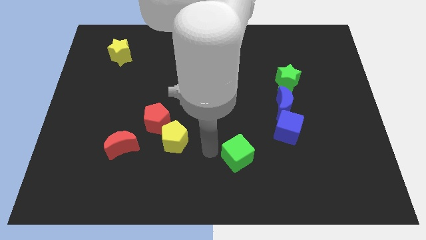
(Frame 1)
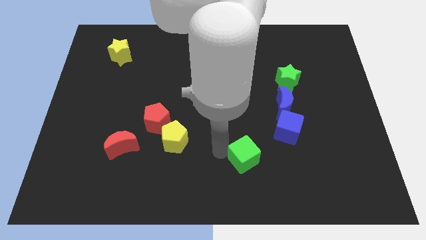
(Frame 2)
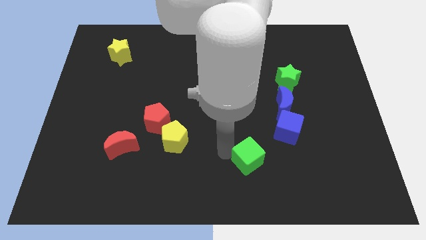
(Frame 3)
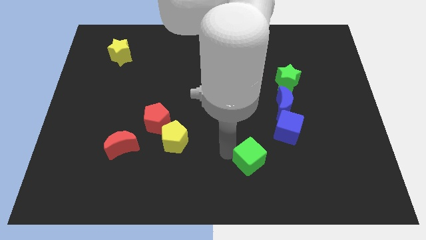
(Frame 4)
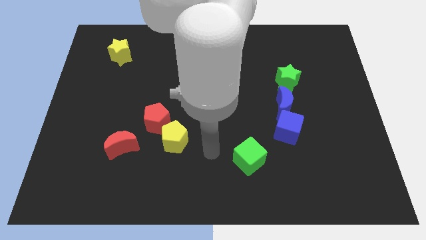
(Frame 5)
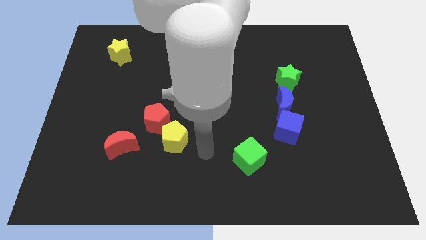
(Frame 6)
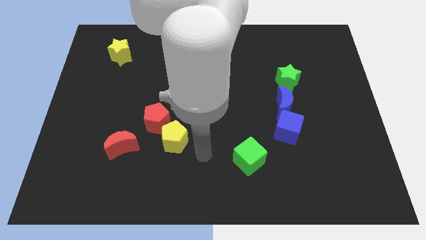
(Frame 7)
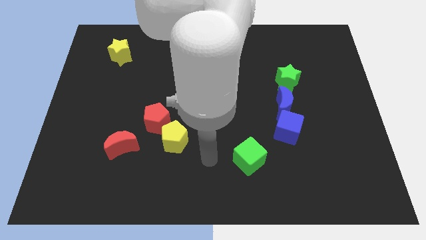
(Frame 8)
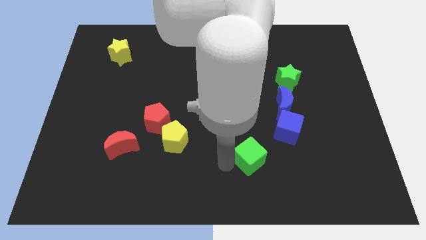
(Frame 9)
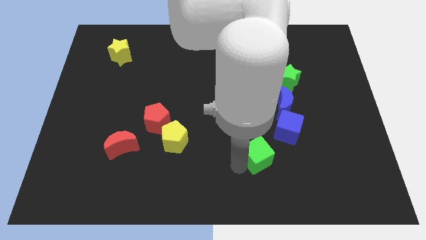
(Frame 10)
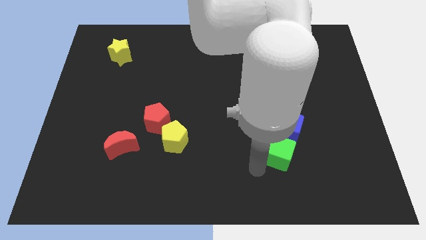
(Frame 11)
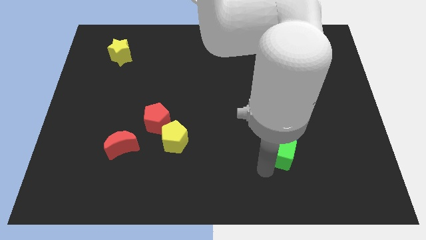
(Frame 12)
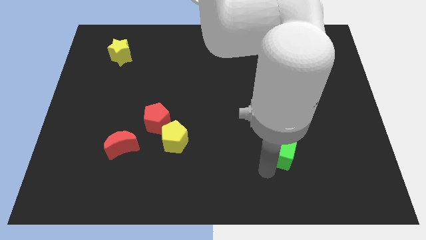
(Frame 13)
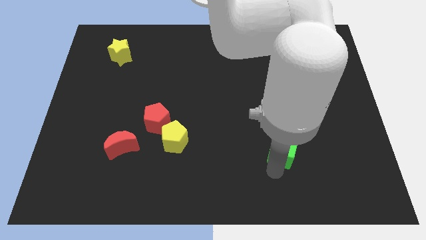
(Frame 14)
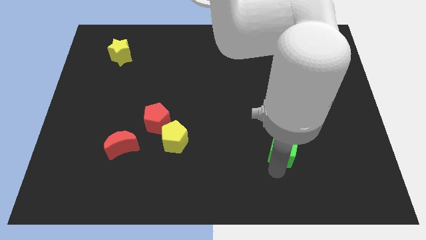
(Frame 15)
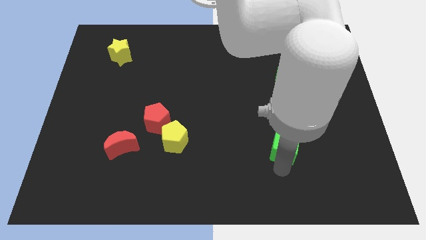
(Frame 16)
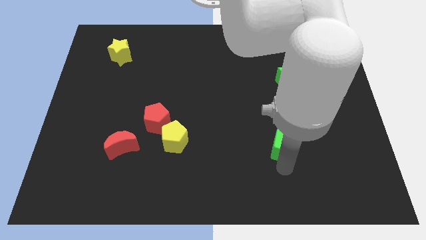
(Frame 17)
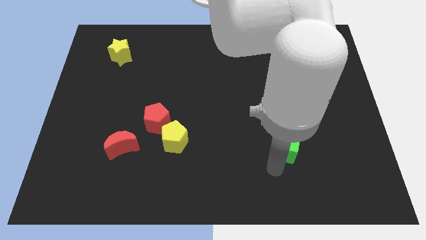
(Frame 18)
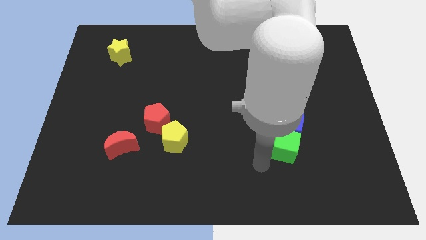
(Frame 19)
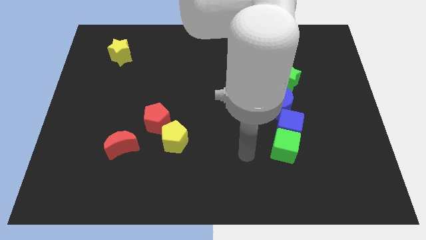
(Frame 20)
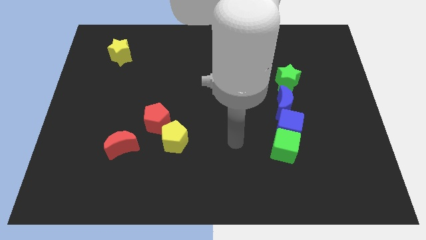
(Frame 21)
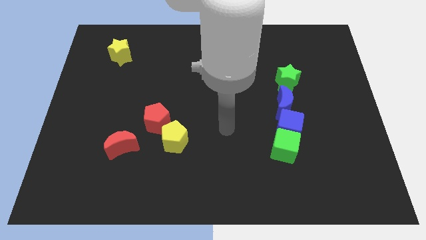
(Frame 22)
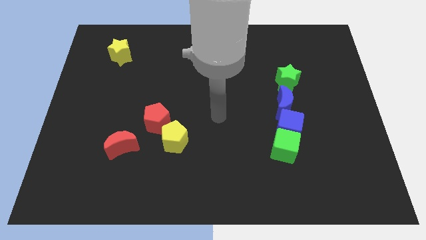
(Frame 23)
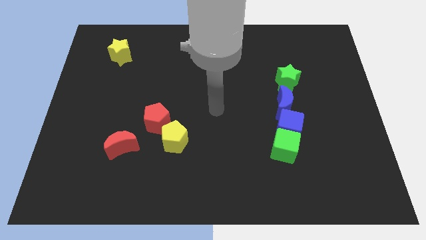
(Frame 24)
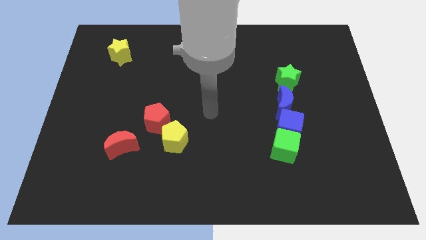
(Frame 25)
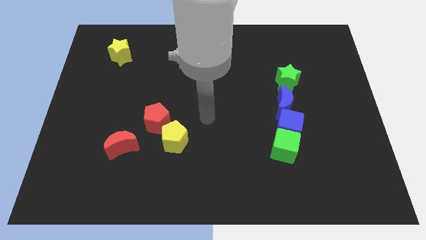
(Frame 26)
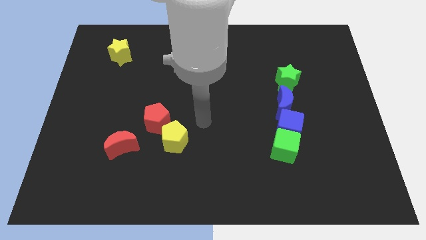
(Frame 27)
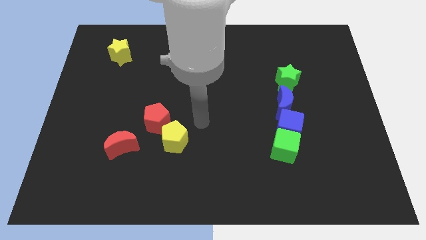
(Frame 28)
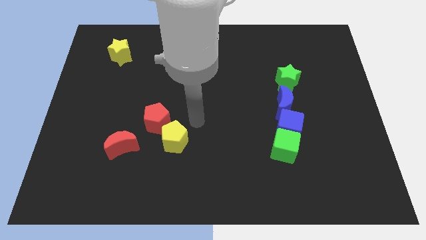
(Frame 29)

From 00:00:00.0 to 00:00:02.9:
place the green cube below the blue cube

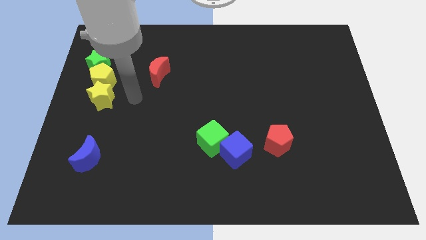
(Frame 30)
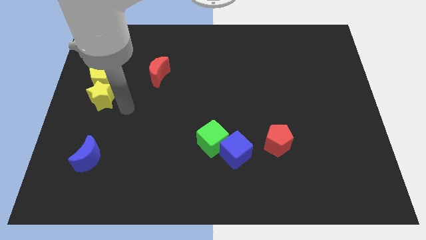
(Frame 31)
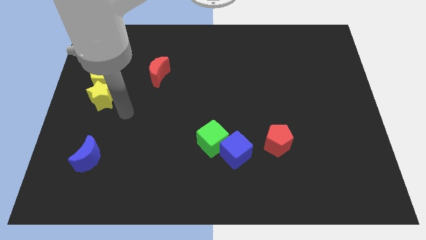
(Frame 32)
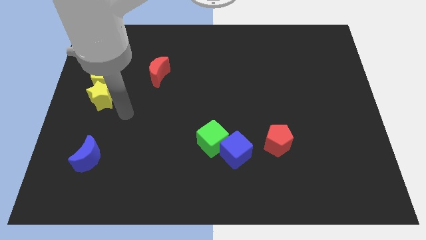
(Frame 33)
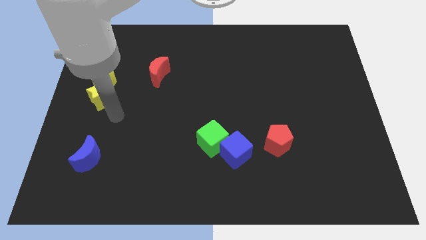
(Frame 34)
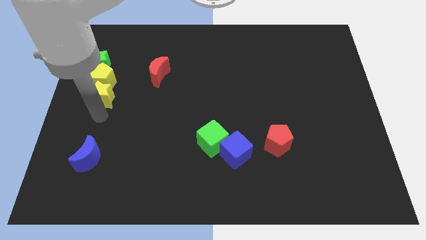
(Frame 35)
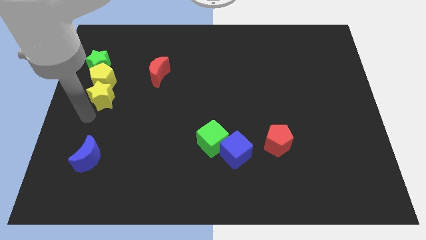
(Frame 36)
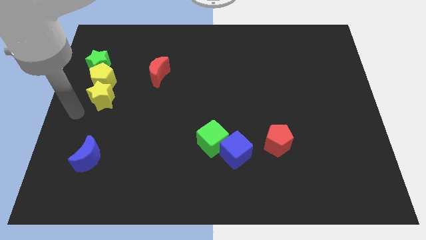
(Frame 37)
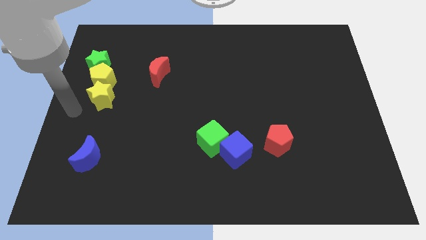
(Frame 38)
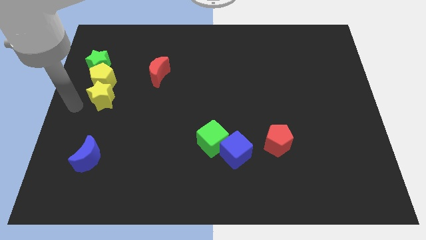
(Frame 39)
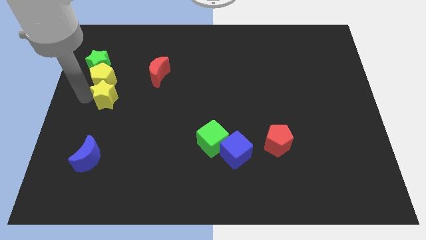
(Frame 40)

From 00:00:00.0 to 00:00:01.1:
push your arm left to yellow star

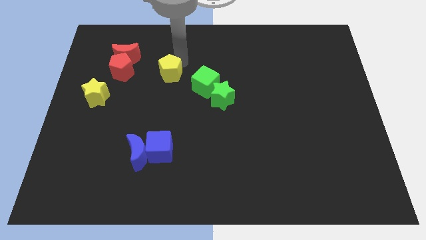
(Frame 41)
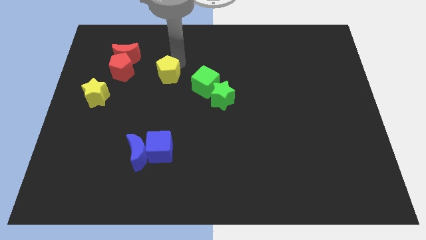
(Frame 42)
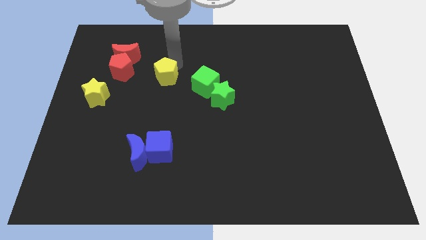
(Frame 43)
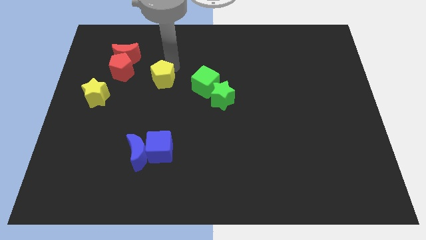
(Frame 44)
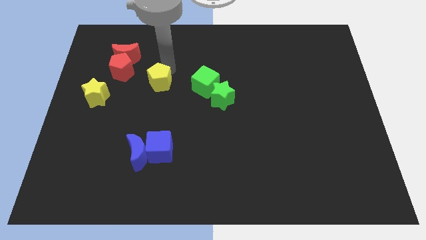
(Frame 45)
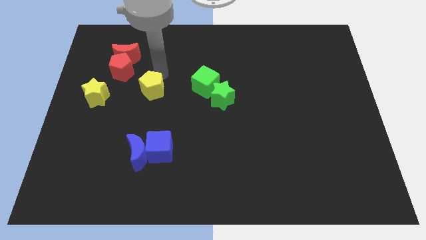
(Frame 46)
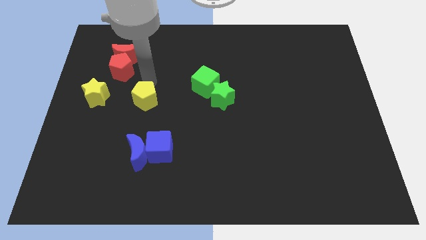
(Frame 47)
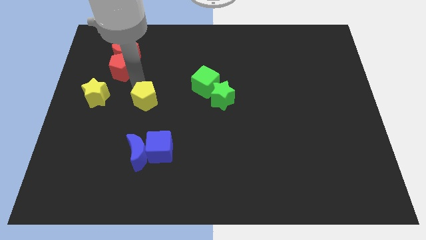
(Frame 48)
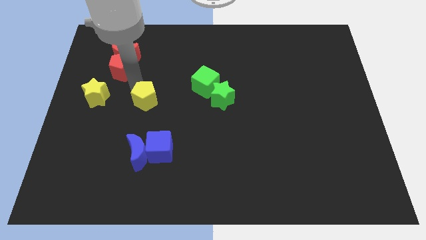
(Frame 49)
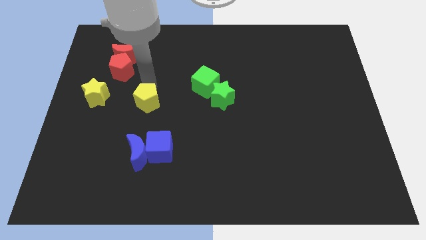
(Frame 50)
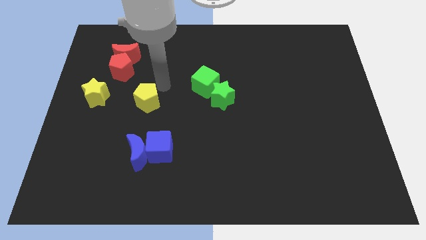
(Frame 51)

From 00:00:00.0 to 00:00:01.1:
slide yellow pentagon to the right of yellow star

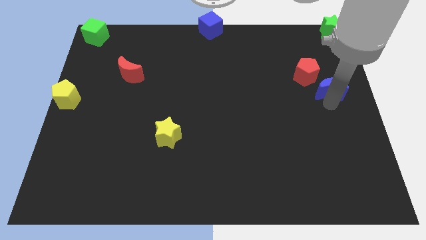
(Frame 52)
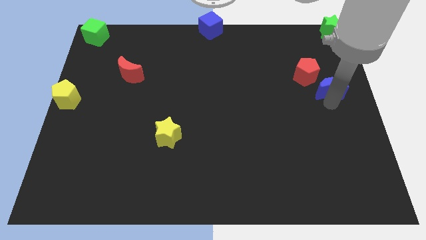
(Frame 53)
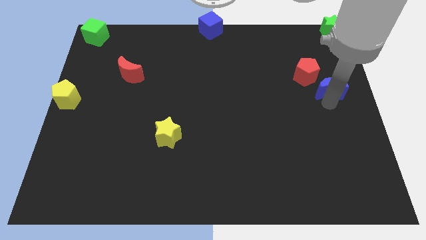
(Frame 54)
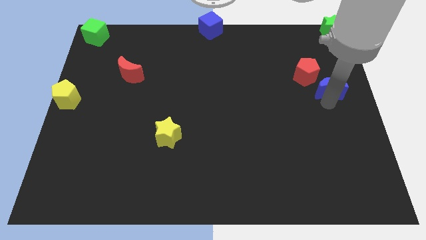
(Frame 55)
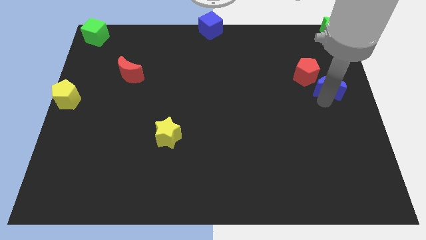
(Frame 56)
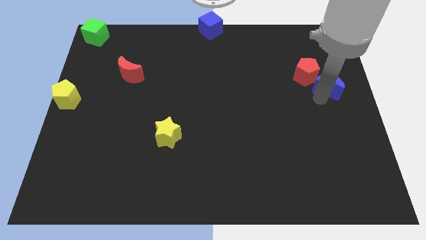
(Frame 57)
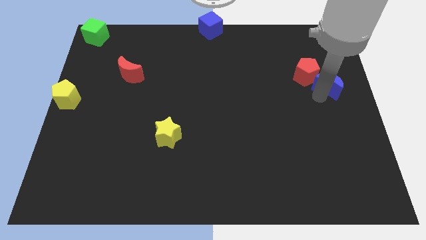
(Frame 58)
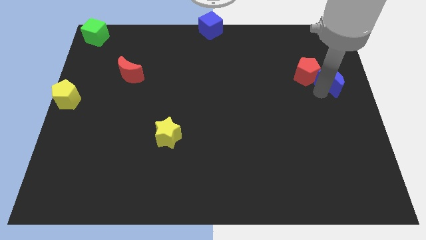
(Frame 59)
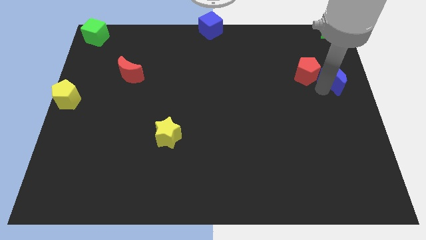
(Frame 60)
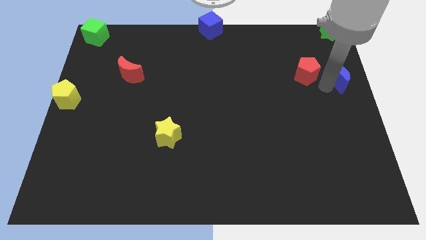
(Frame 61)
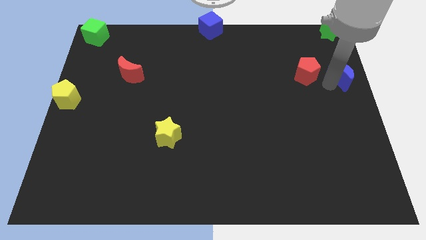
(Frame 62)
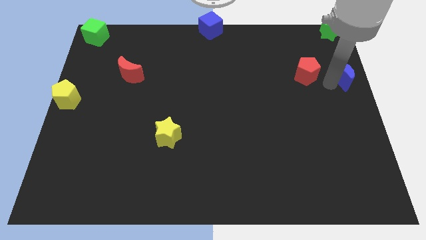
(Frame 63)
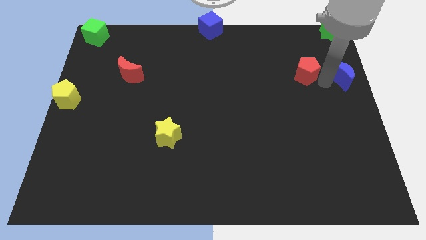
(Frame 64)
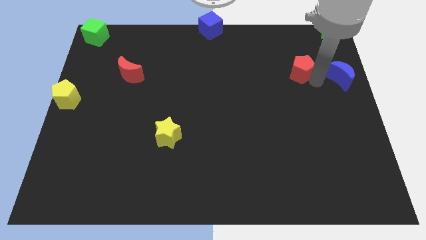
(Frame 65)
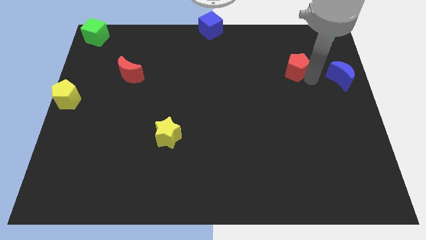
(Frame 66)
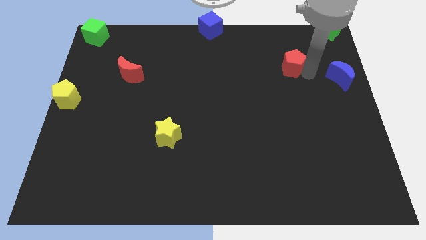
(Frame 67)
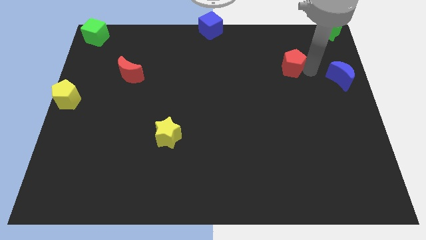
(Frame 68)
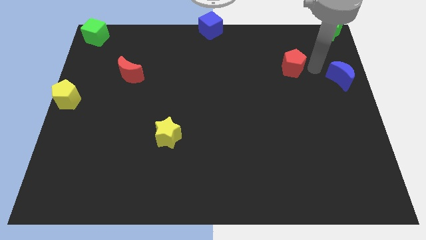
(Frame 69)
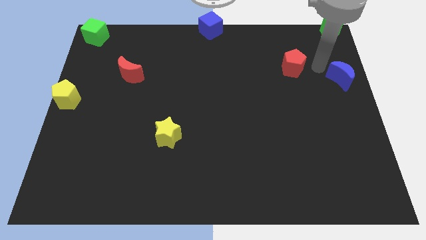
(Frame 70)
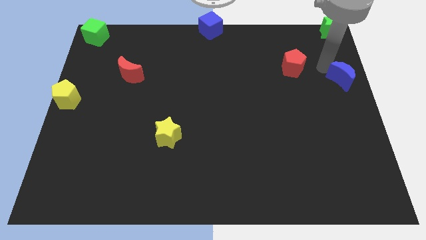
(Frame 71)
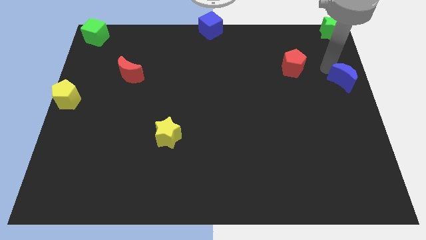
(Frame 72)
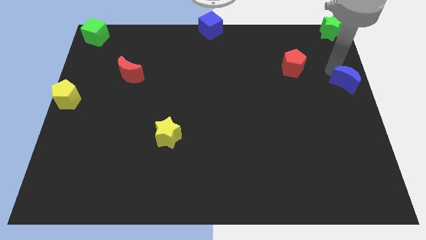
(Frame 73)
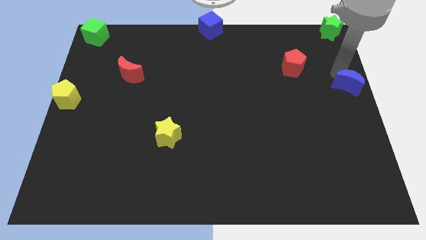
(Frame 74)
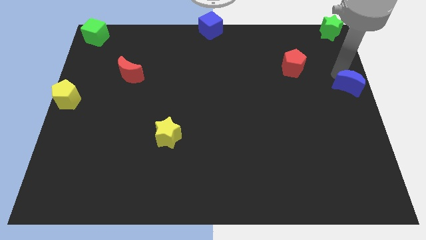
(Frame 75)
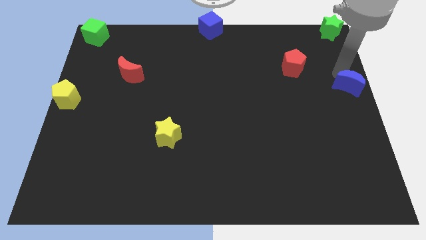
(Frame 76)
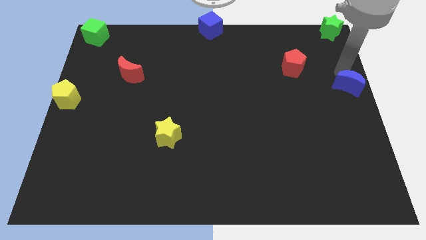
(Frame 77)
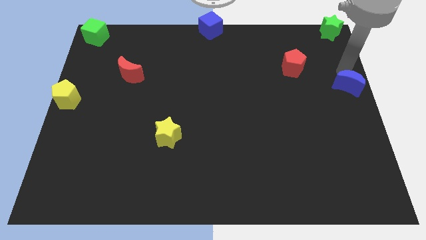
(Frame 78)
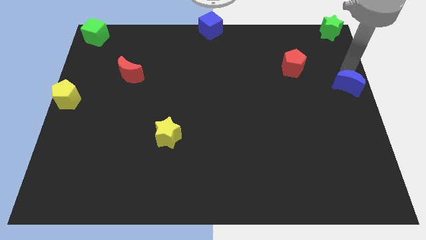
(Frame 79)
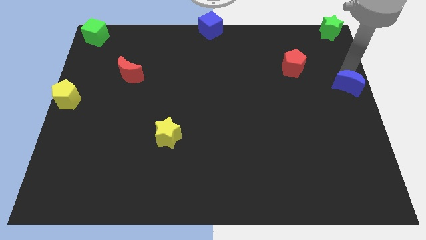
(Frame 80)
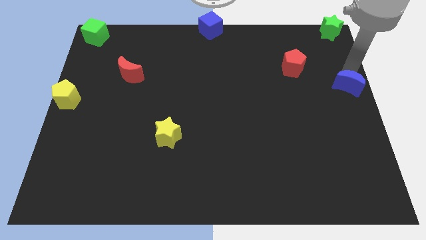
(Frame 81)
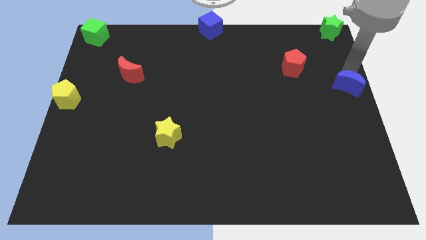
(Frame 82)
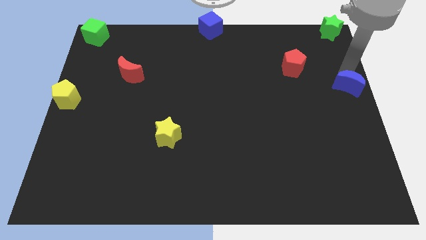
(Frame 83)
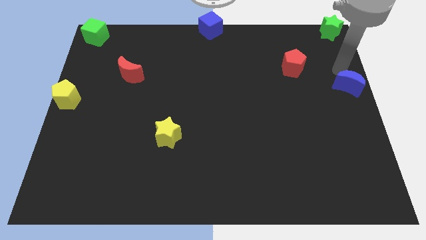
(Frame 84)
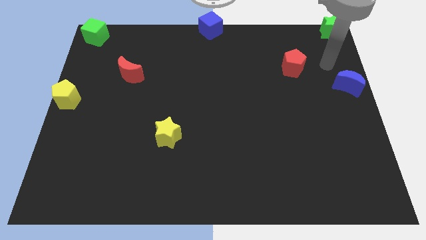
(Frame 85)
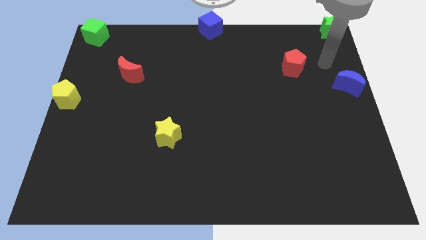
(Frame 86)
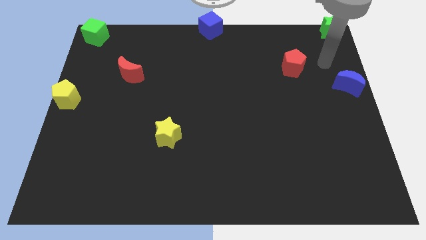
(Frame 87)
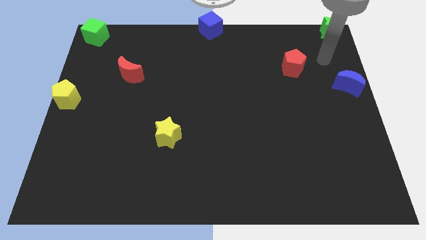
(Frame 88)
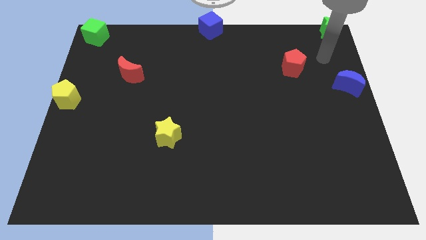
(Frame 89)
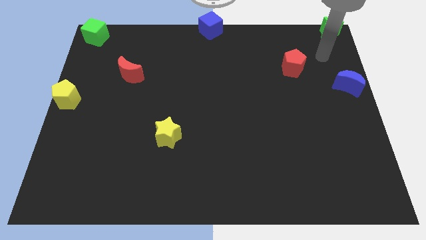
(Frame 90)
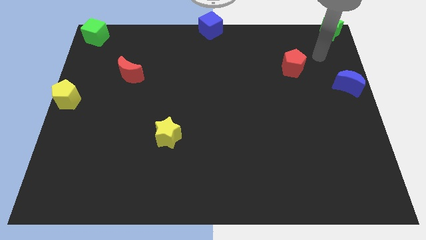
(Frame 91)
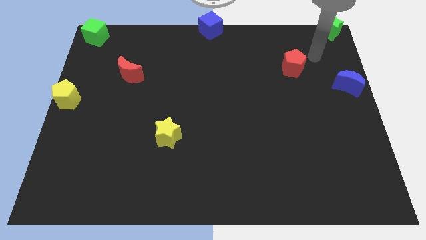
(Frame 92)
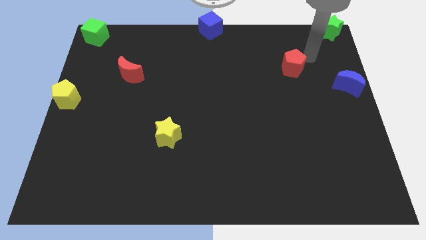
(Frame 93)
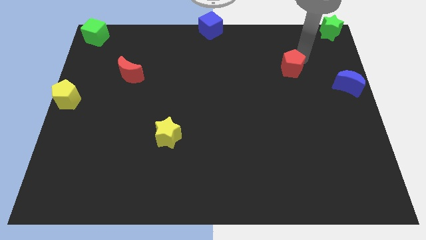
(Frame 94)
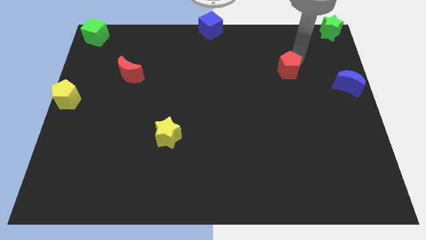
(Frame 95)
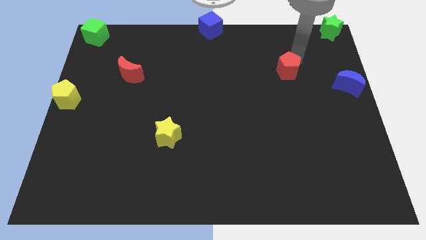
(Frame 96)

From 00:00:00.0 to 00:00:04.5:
move blue moon to the right of the board
